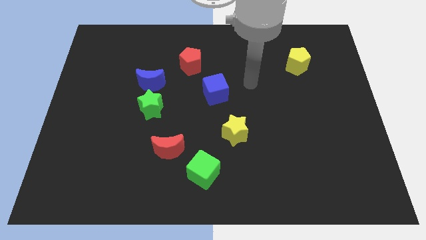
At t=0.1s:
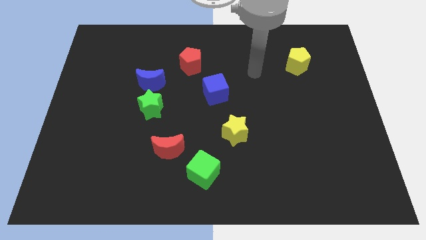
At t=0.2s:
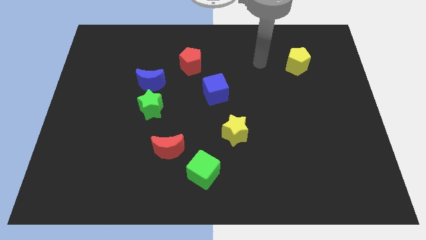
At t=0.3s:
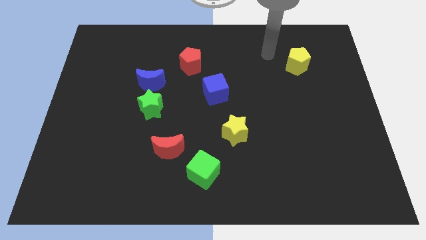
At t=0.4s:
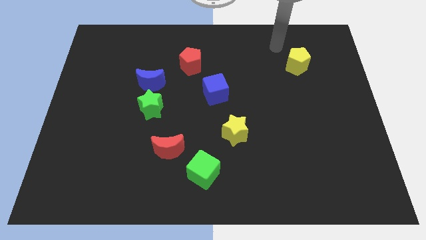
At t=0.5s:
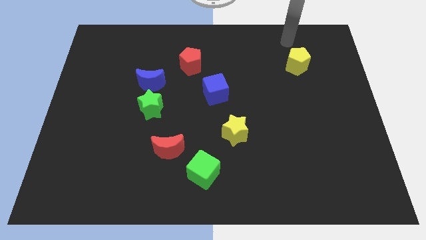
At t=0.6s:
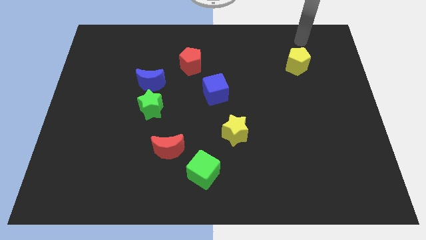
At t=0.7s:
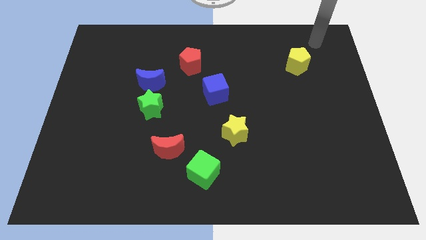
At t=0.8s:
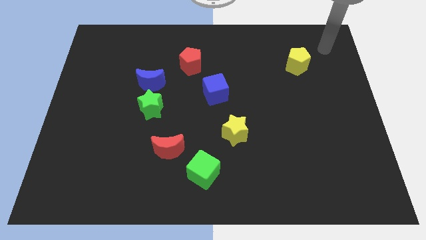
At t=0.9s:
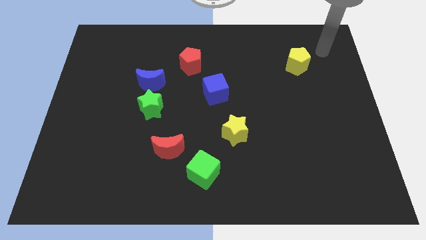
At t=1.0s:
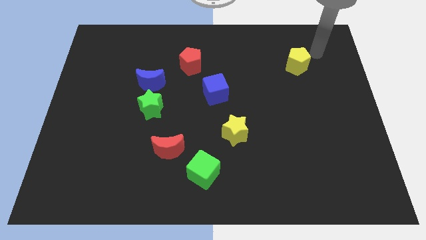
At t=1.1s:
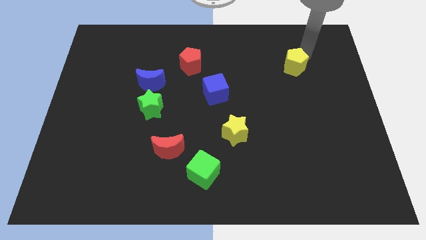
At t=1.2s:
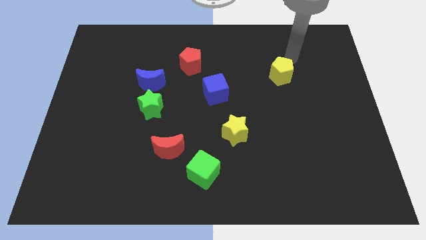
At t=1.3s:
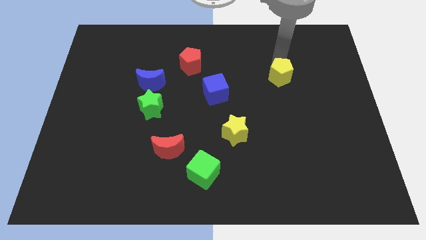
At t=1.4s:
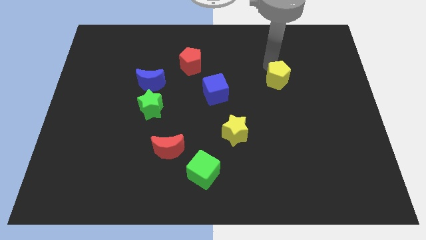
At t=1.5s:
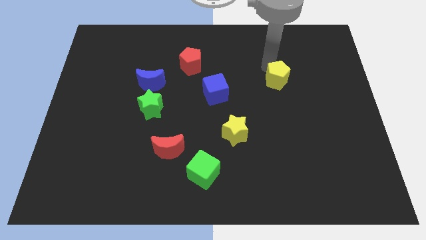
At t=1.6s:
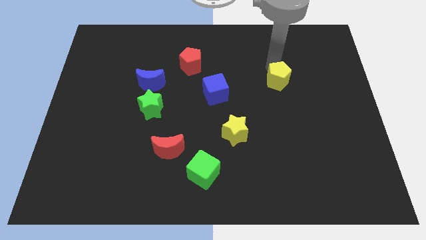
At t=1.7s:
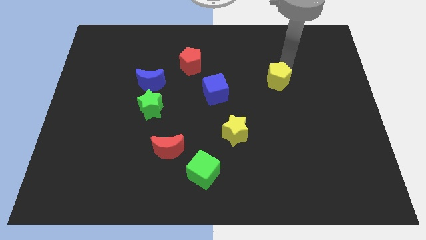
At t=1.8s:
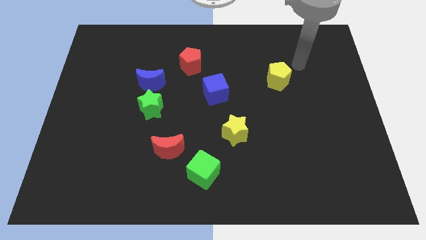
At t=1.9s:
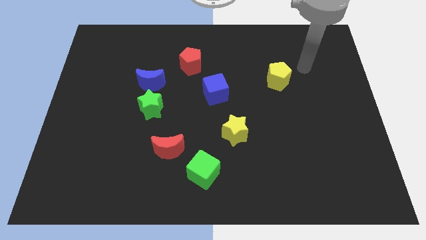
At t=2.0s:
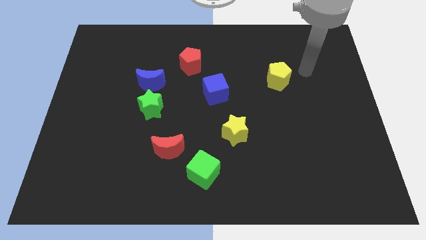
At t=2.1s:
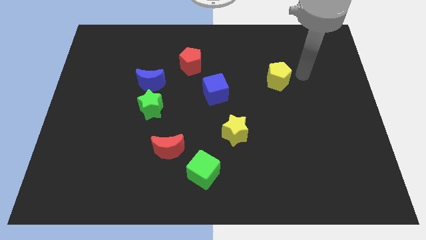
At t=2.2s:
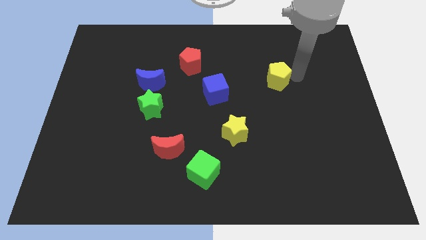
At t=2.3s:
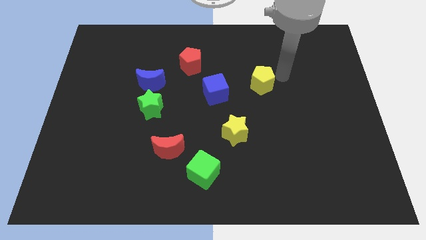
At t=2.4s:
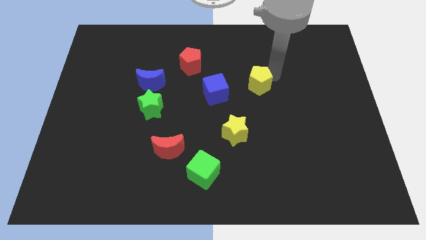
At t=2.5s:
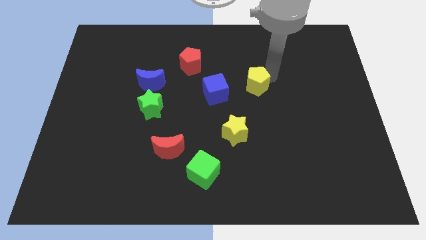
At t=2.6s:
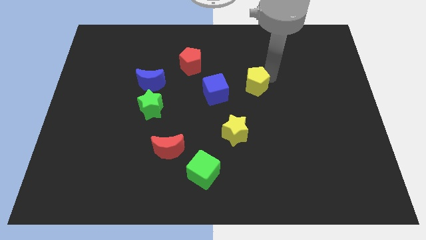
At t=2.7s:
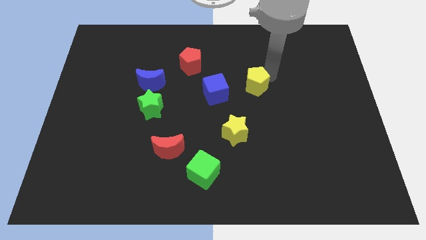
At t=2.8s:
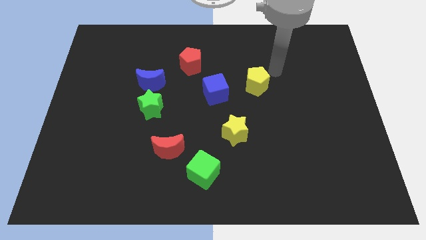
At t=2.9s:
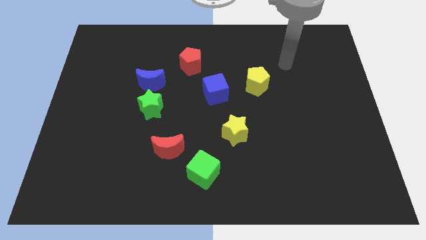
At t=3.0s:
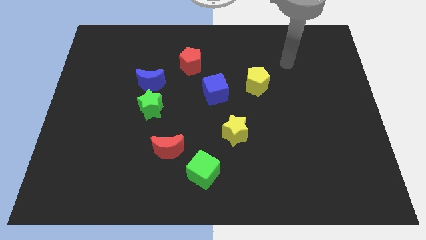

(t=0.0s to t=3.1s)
place the yellow pentagon diagonally top right to the yellow star

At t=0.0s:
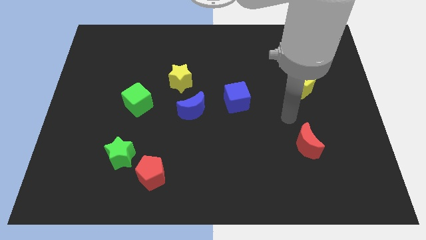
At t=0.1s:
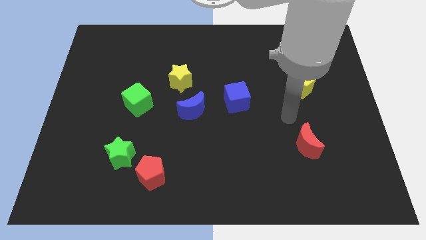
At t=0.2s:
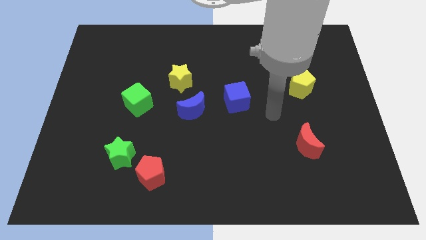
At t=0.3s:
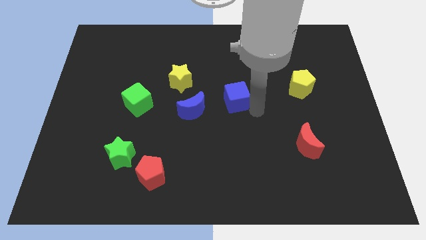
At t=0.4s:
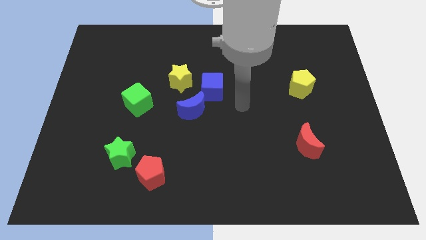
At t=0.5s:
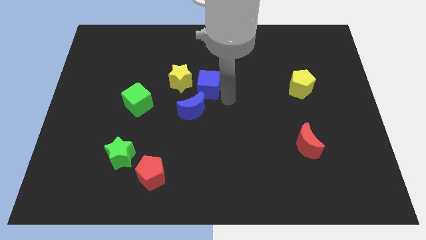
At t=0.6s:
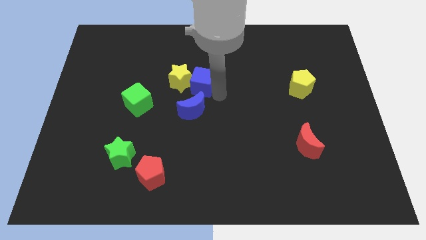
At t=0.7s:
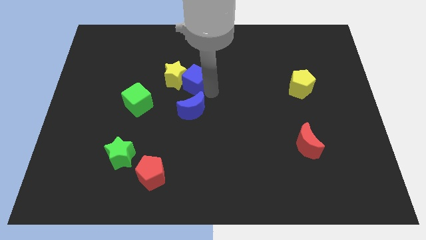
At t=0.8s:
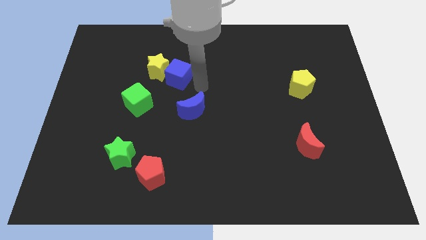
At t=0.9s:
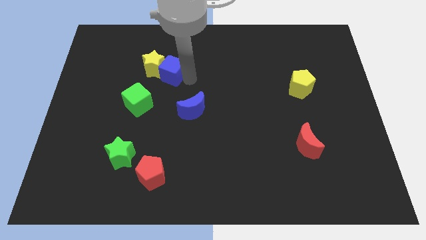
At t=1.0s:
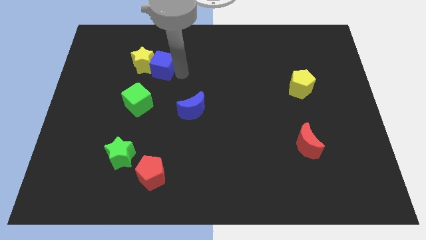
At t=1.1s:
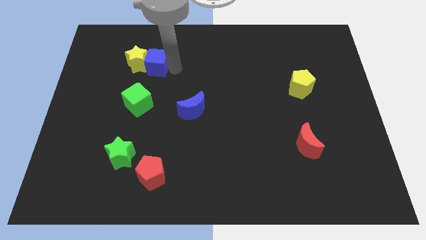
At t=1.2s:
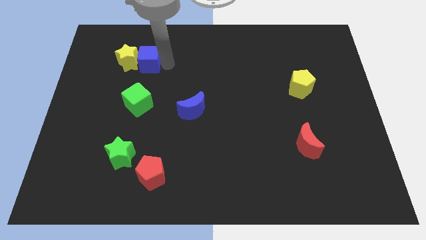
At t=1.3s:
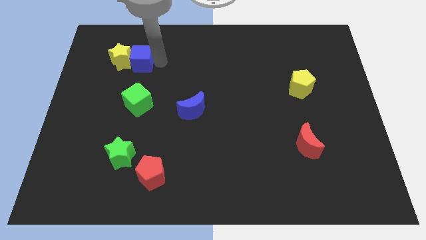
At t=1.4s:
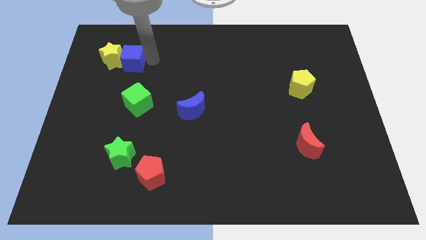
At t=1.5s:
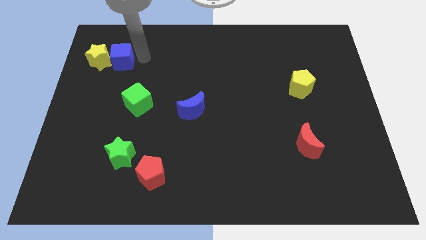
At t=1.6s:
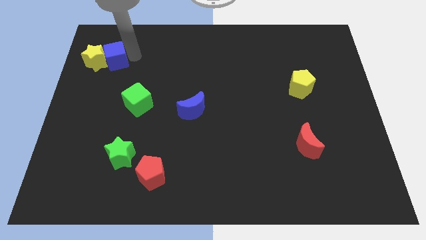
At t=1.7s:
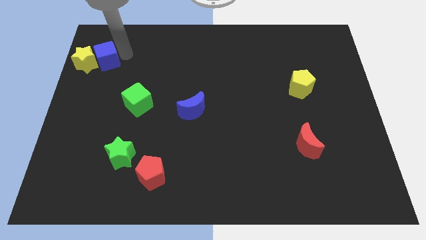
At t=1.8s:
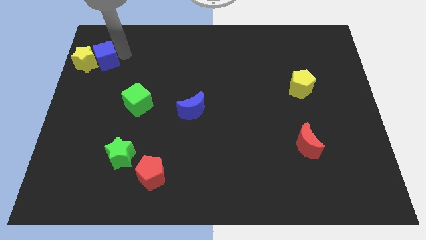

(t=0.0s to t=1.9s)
push the blue cube with yellow star to the left side

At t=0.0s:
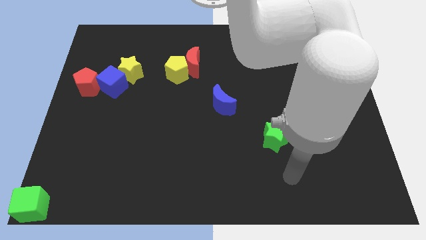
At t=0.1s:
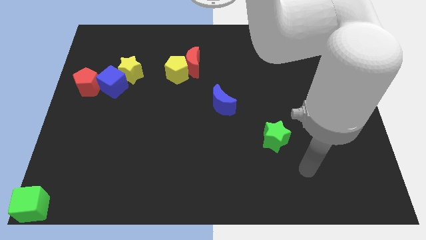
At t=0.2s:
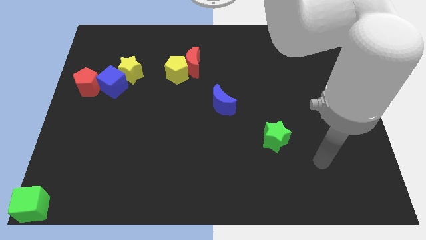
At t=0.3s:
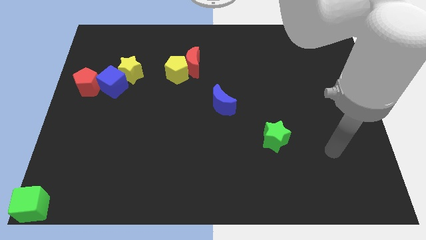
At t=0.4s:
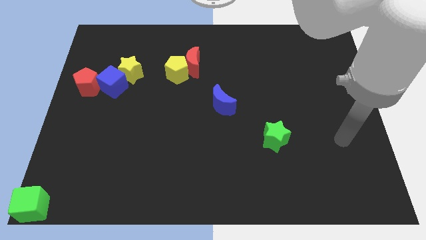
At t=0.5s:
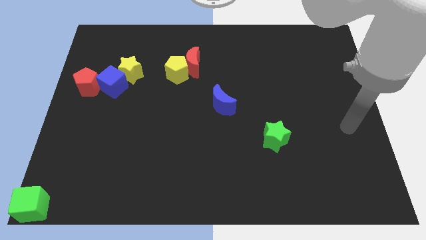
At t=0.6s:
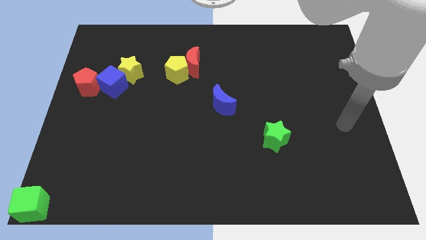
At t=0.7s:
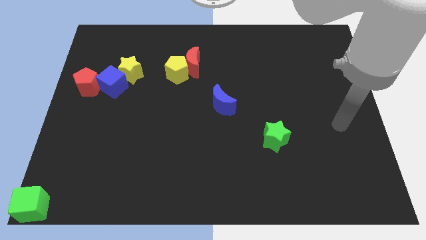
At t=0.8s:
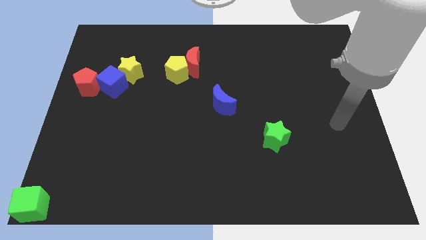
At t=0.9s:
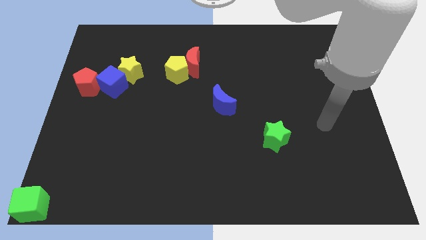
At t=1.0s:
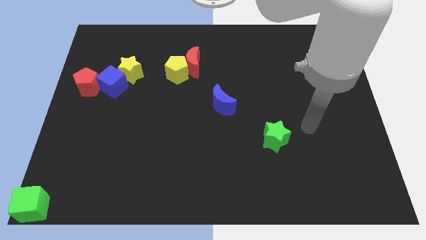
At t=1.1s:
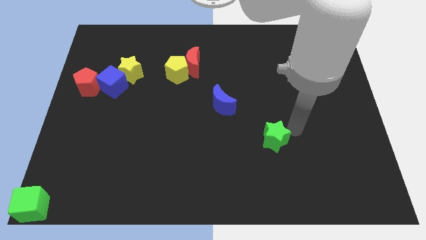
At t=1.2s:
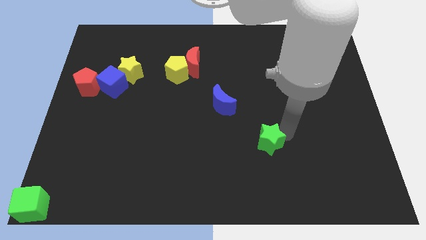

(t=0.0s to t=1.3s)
place the arm at the top right of the green star

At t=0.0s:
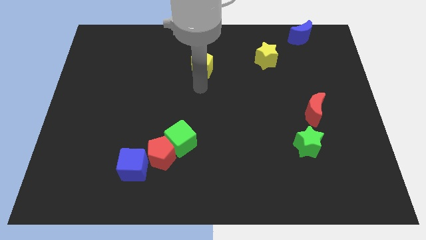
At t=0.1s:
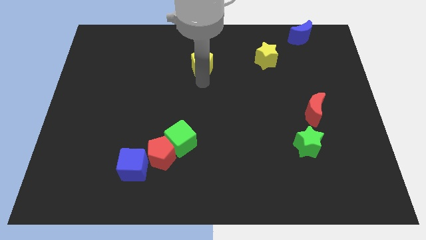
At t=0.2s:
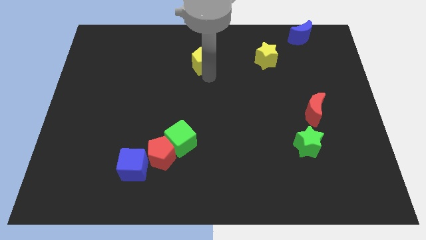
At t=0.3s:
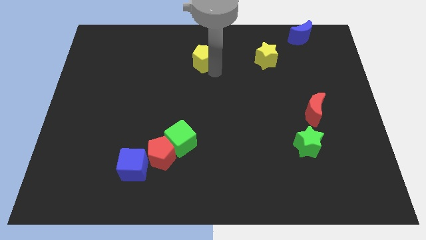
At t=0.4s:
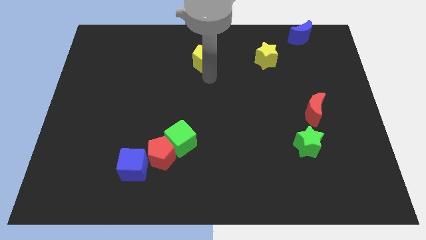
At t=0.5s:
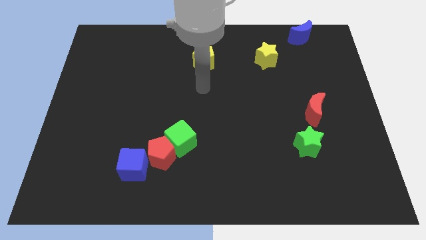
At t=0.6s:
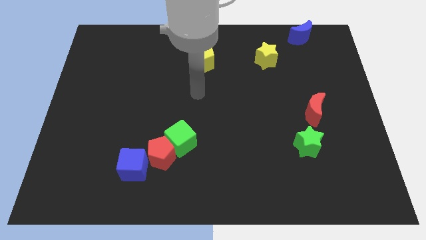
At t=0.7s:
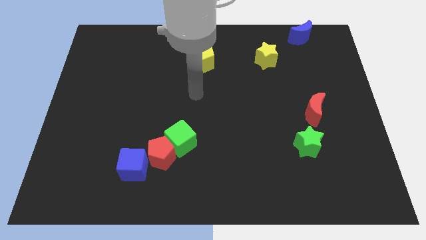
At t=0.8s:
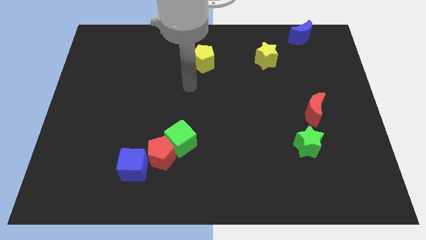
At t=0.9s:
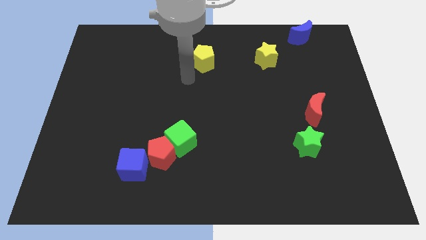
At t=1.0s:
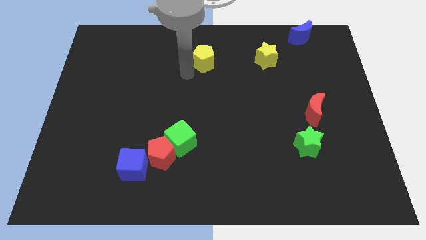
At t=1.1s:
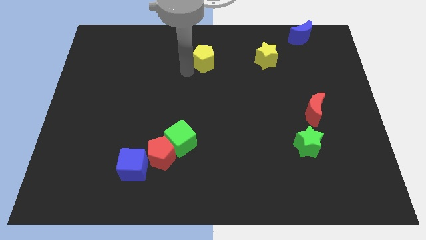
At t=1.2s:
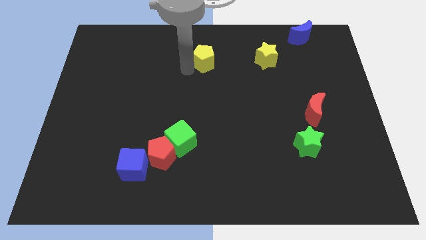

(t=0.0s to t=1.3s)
slide the yellow pentagon to the left side of the yellow star

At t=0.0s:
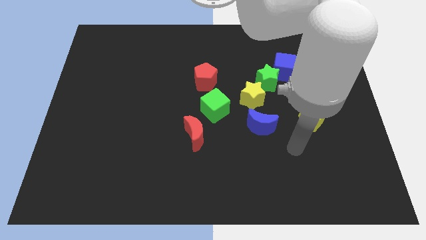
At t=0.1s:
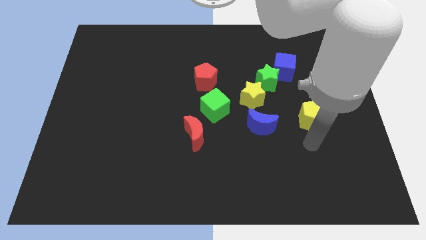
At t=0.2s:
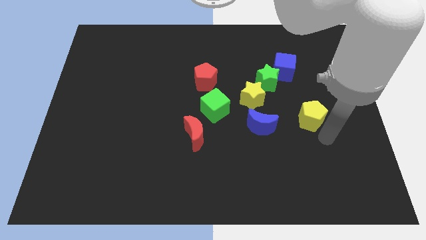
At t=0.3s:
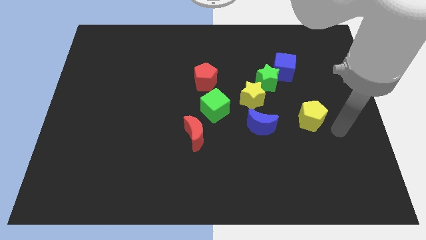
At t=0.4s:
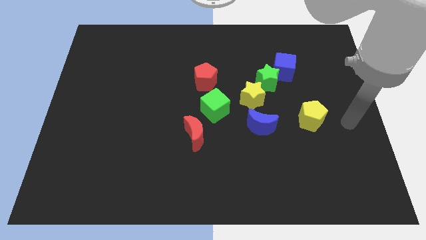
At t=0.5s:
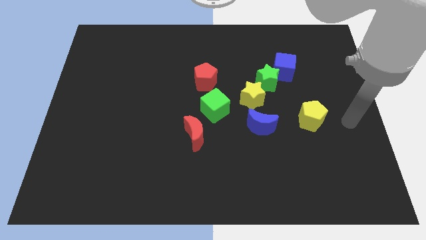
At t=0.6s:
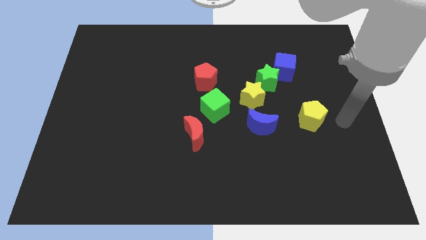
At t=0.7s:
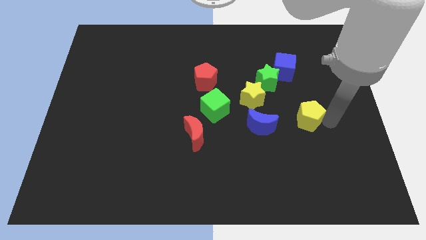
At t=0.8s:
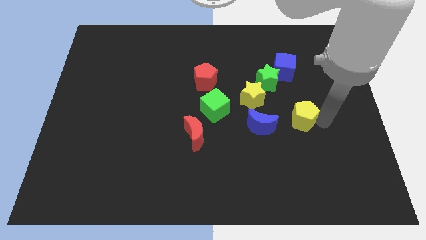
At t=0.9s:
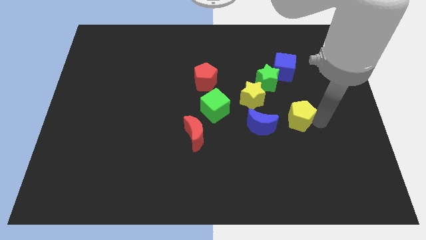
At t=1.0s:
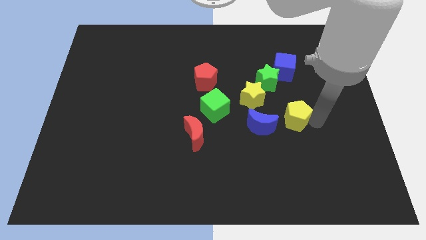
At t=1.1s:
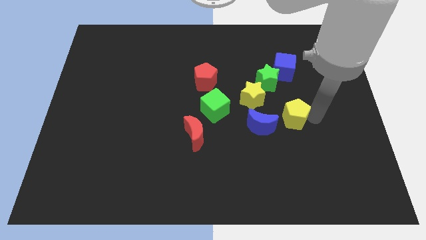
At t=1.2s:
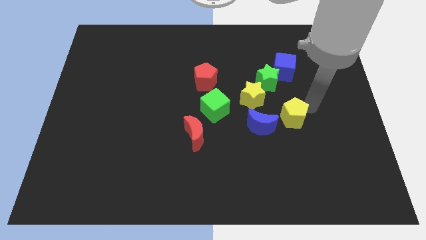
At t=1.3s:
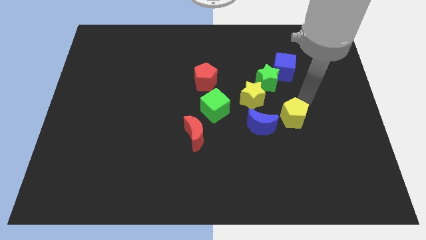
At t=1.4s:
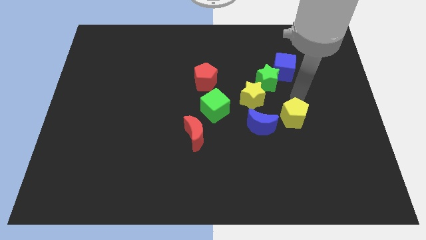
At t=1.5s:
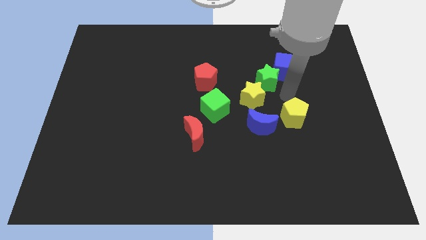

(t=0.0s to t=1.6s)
drag the yellow pentagon to the top right side of the blue moon
